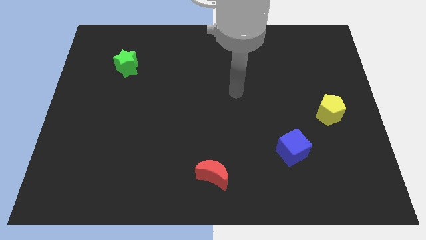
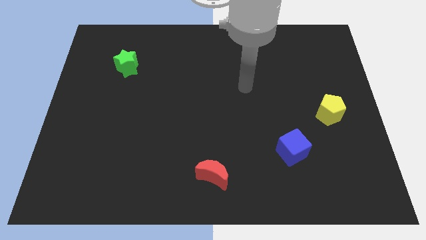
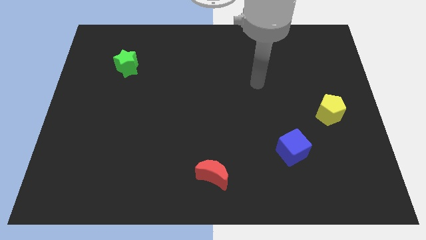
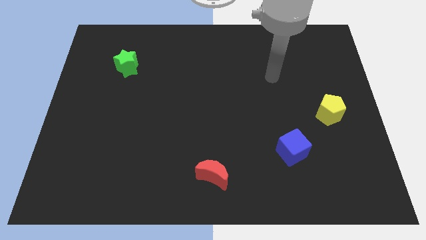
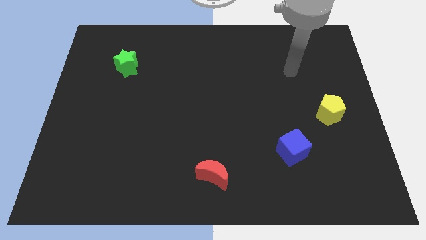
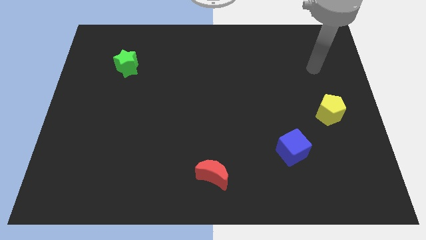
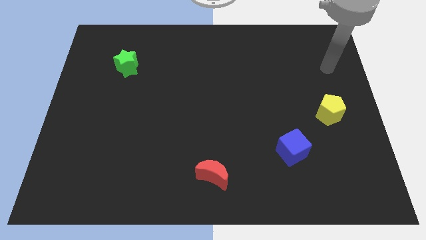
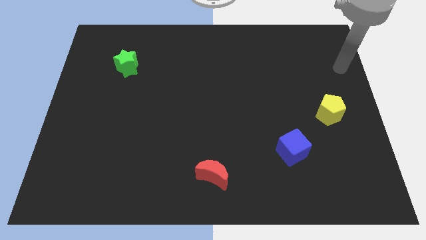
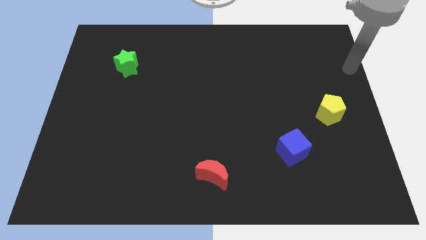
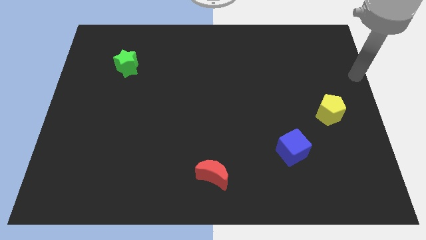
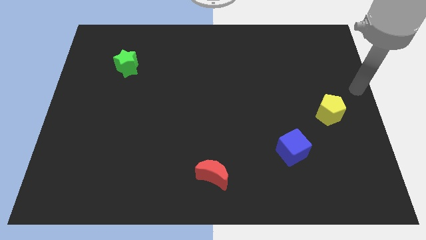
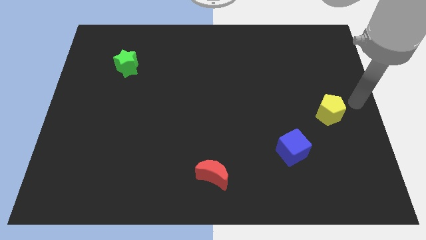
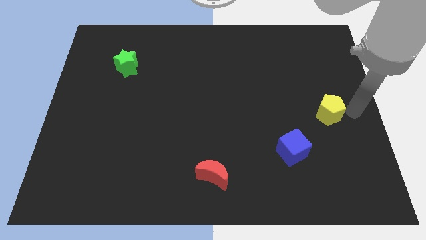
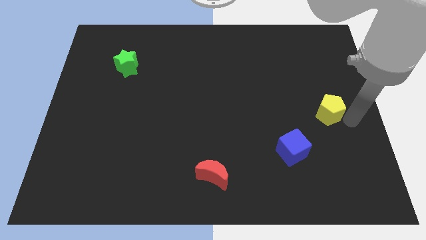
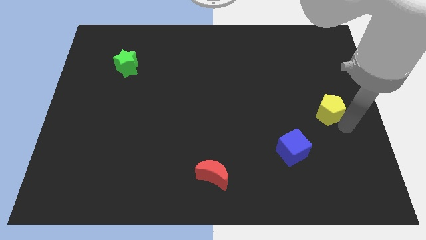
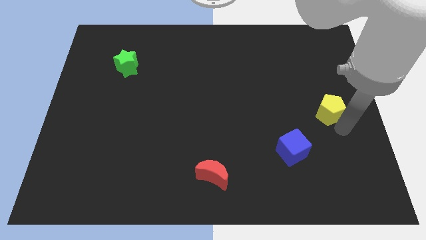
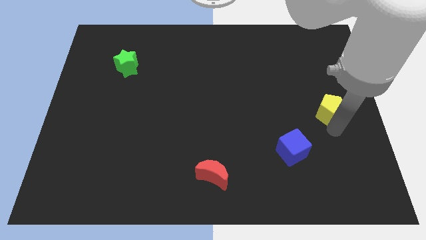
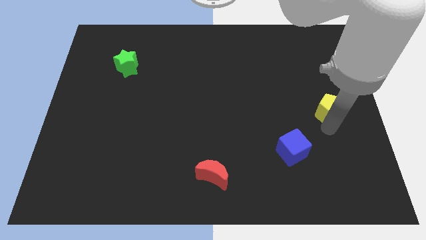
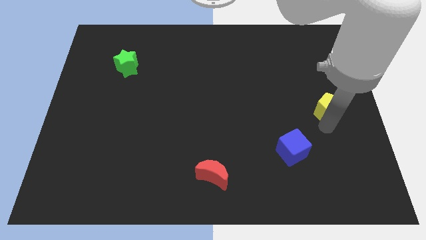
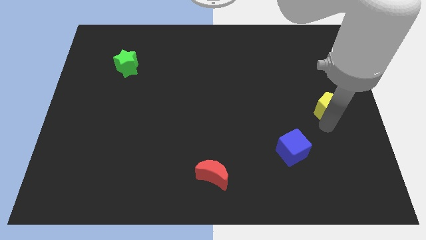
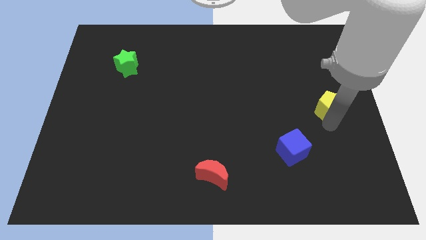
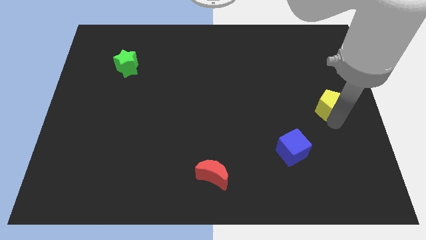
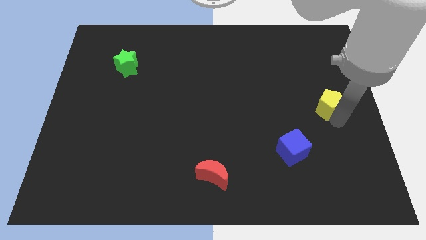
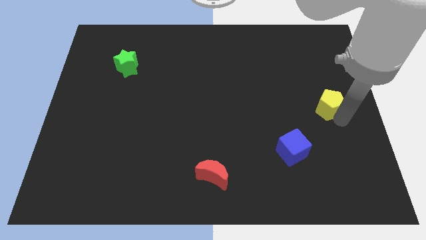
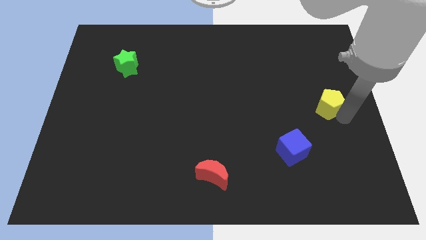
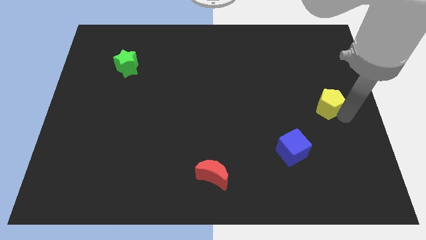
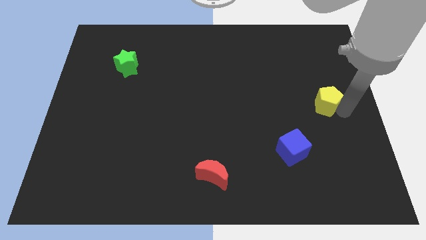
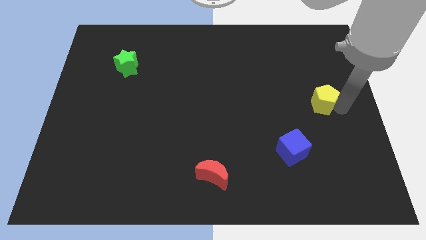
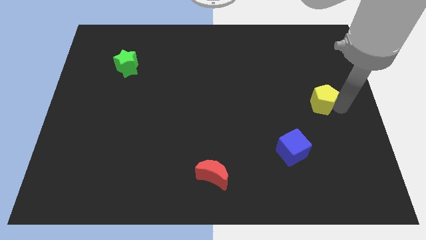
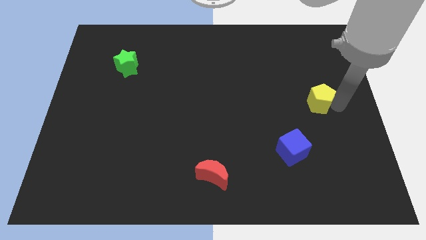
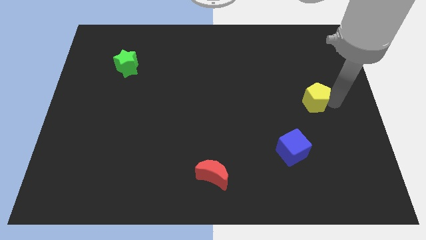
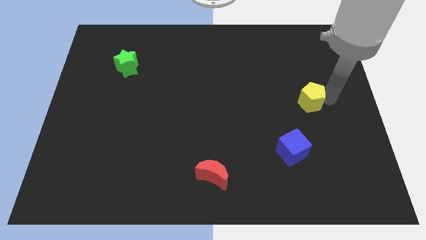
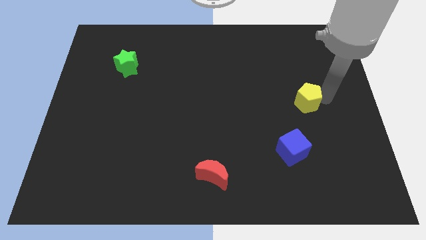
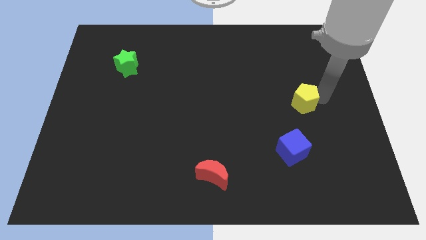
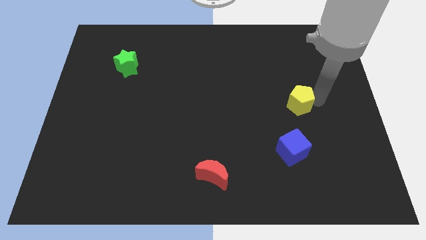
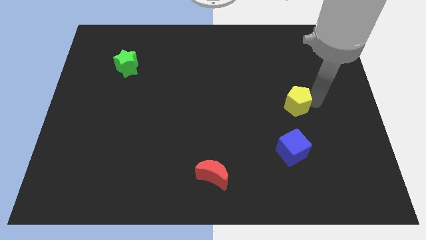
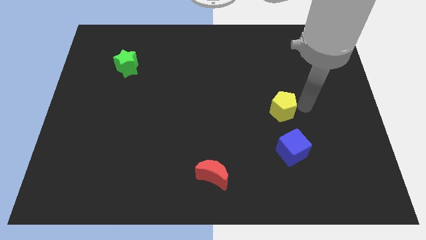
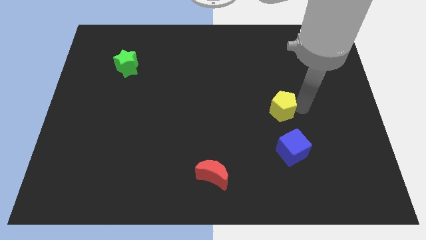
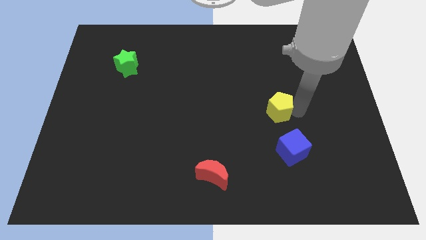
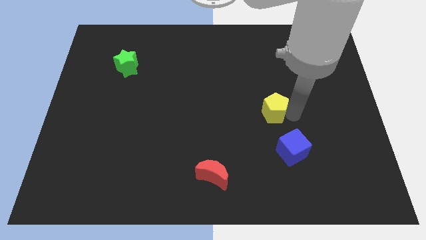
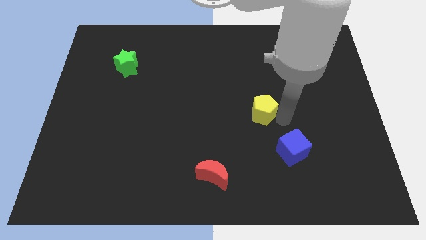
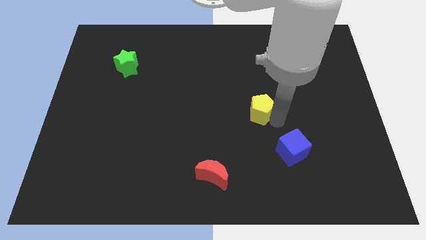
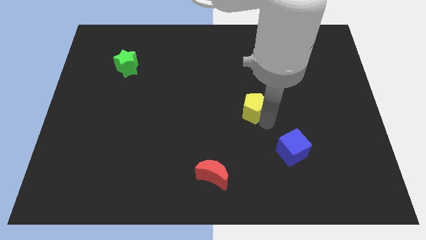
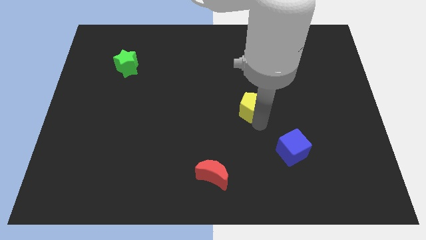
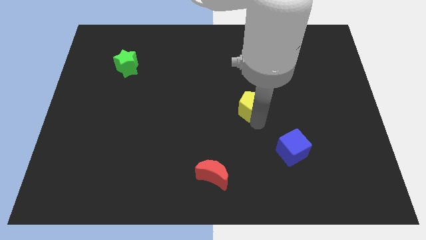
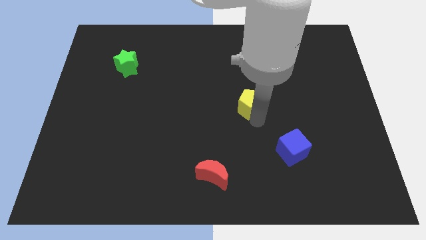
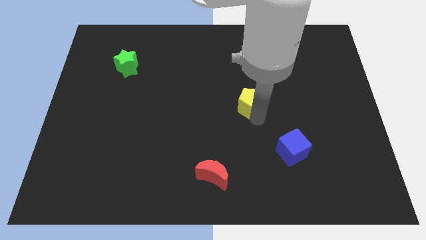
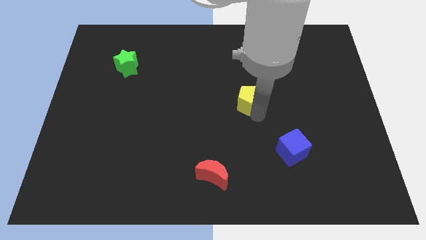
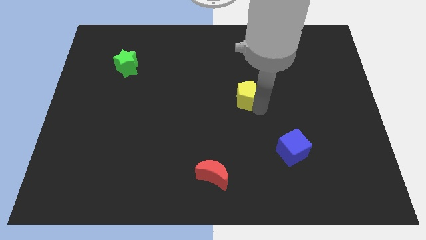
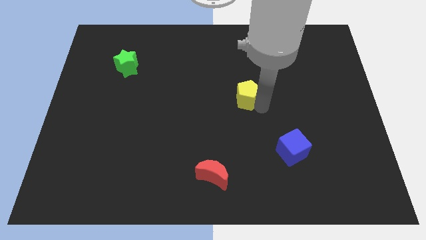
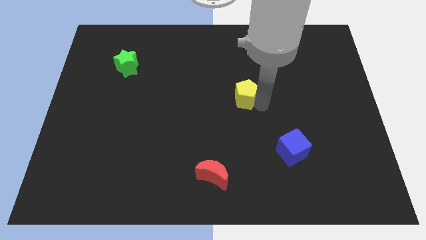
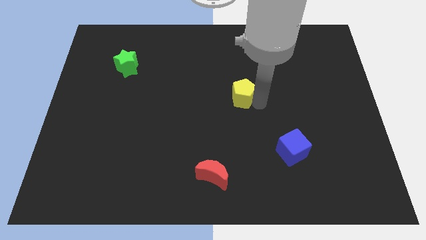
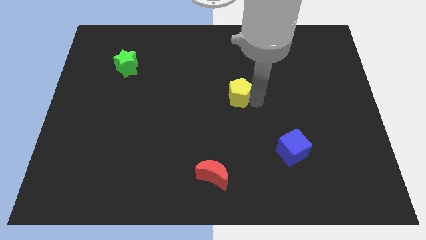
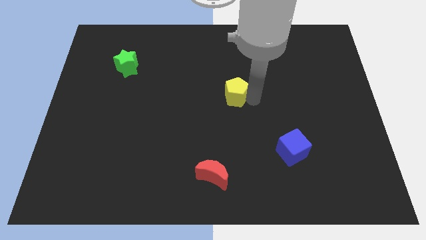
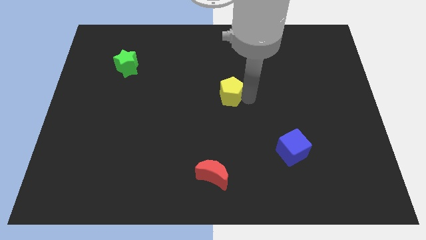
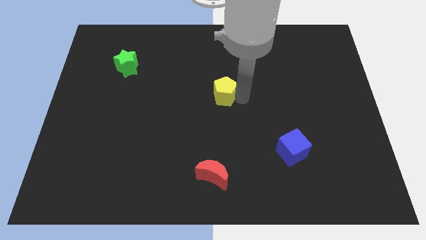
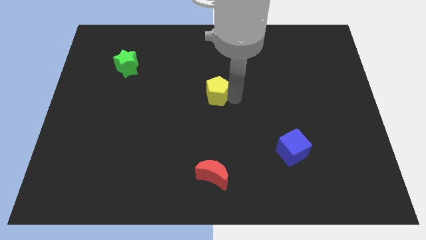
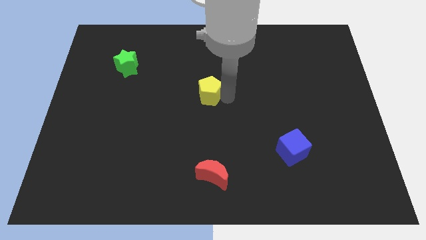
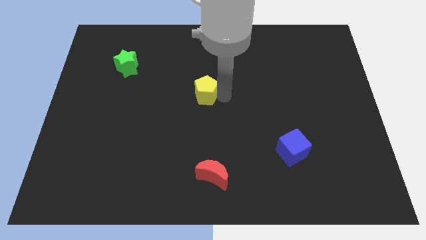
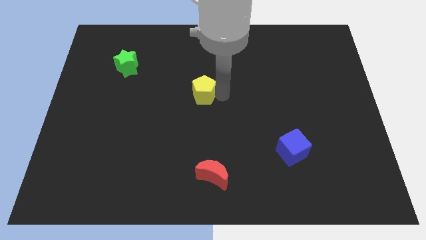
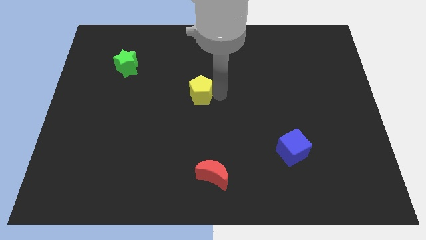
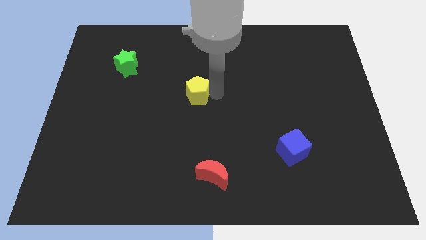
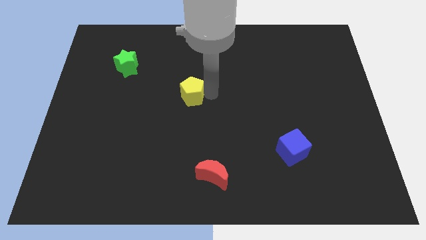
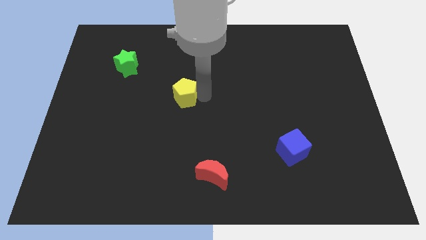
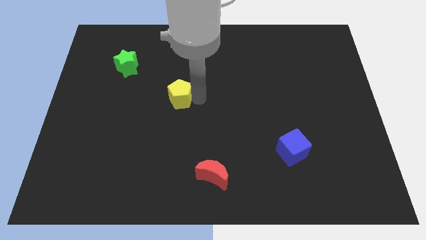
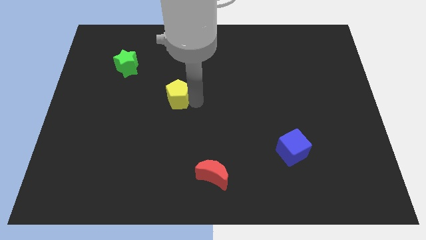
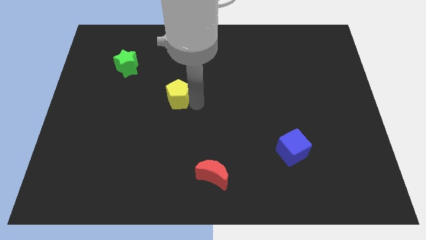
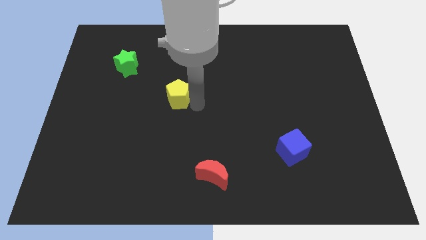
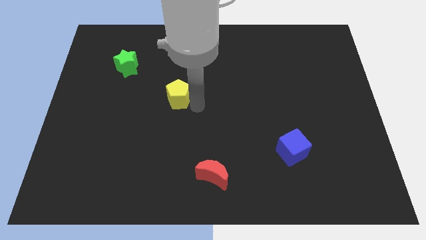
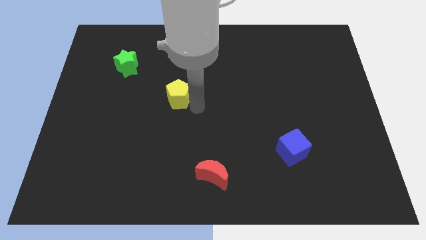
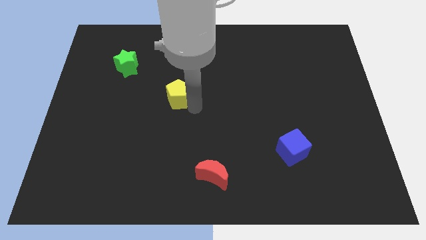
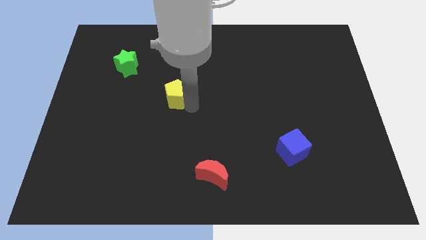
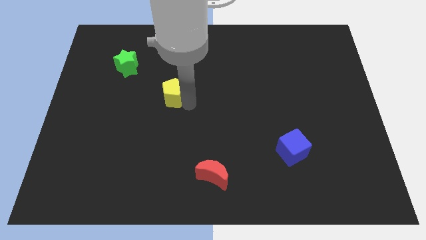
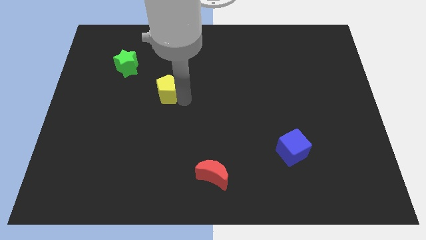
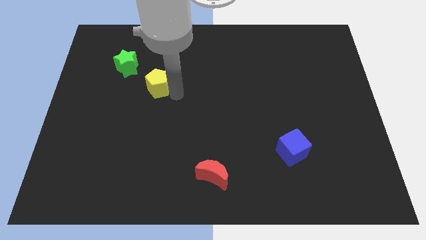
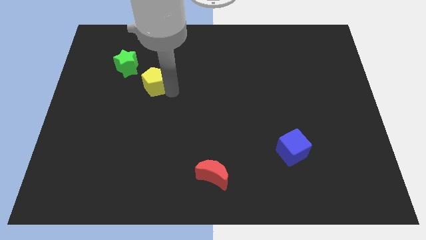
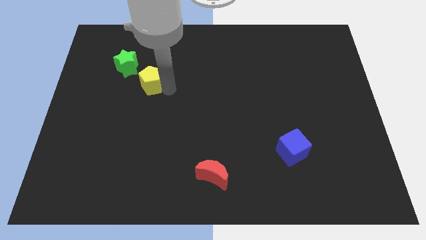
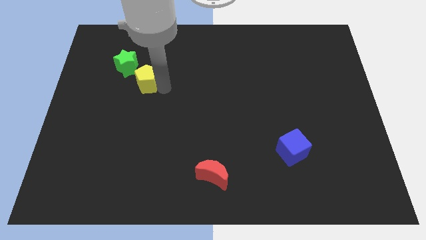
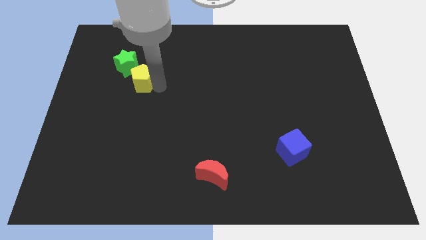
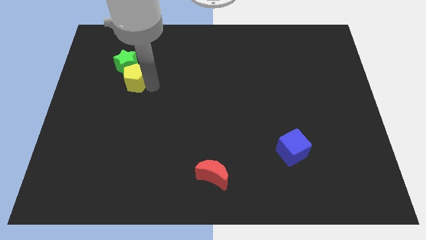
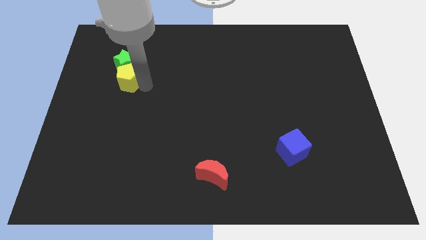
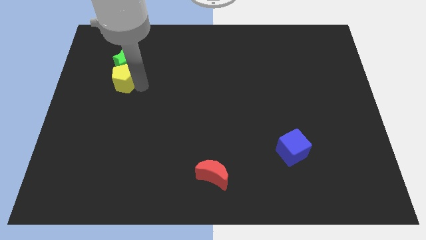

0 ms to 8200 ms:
move the yellow block close to the green block

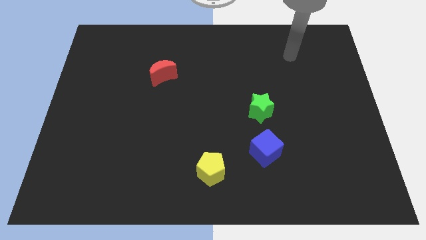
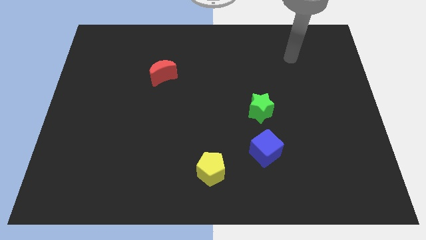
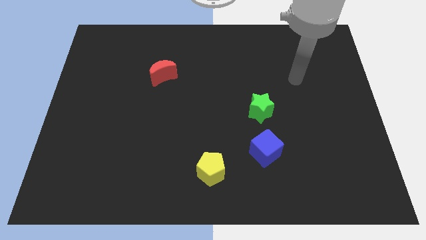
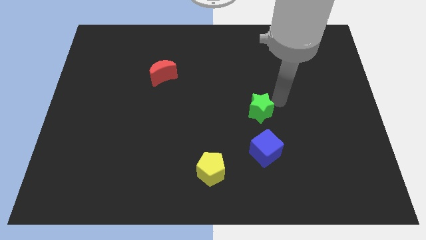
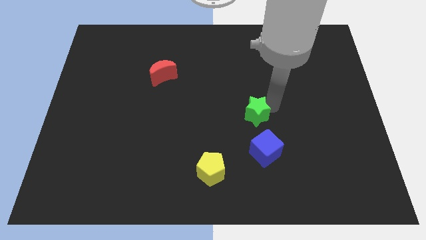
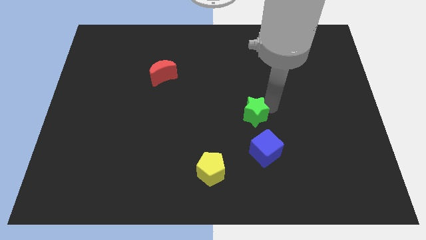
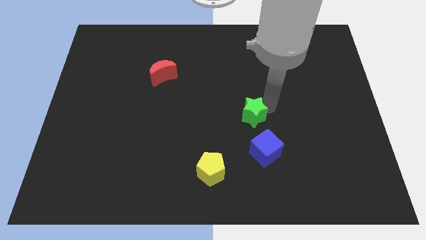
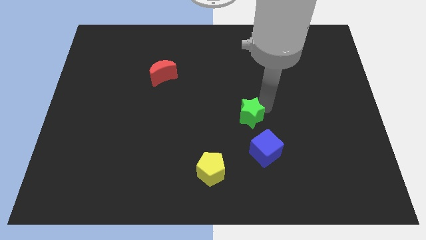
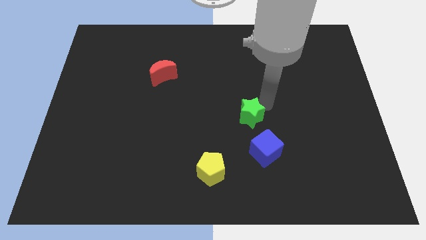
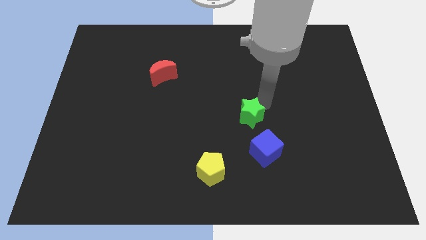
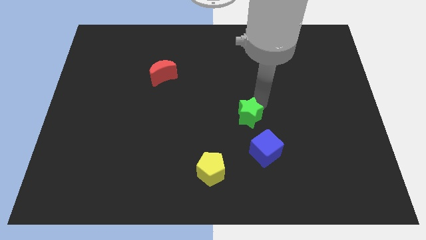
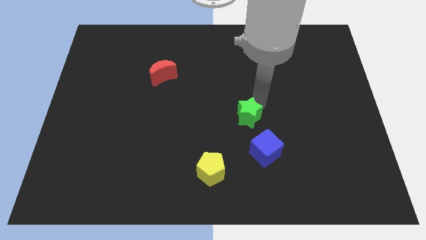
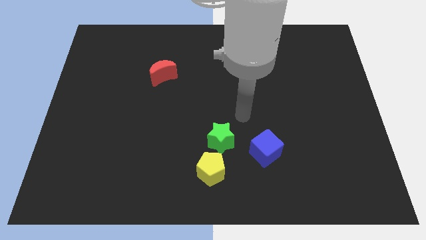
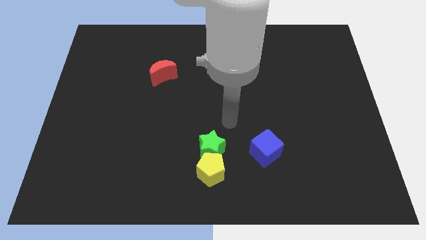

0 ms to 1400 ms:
push the star close to the pentagon
